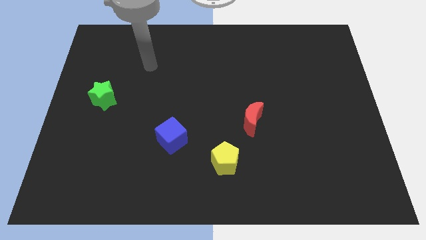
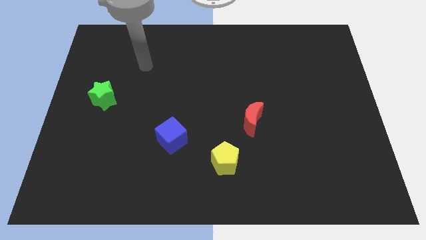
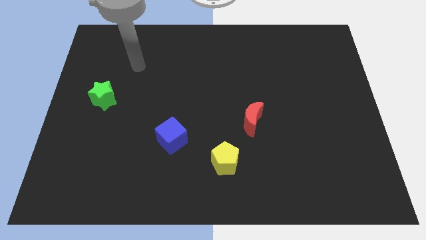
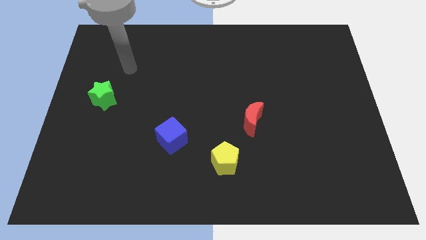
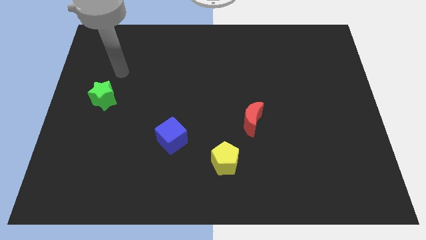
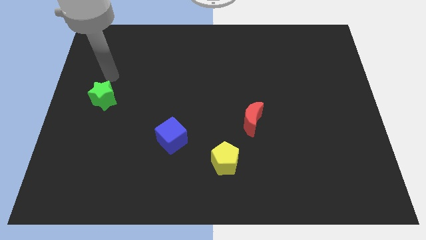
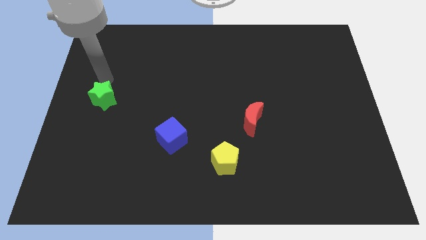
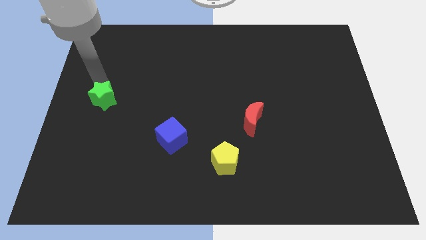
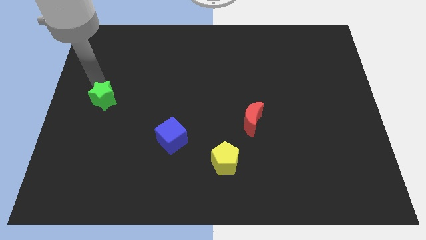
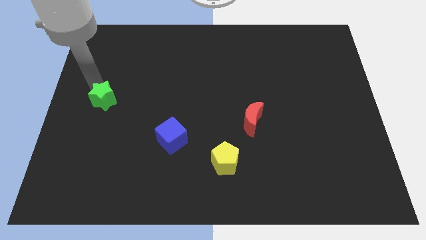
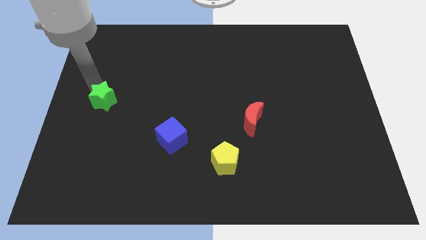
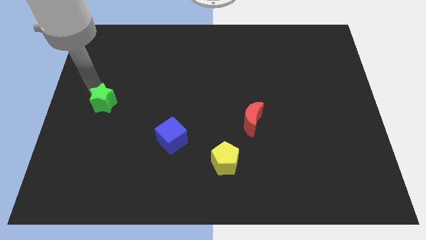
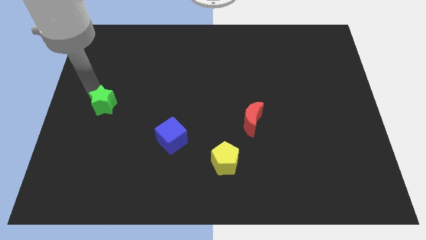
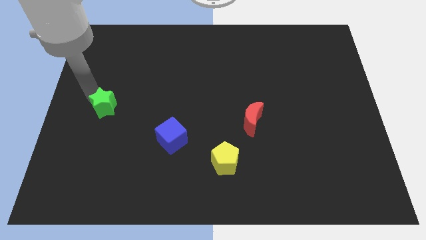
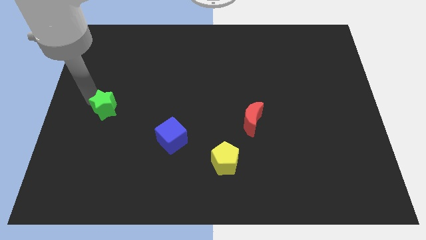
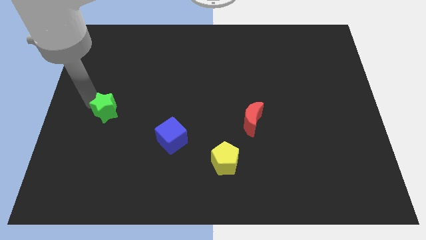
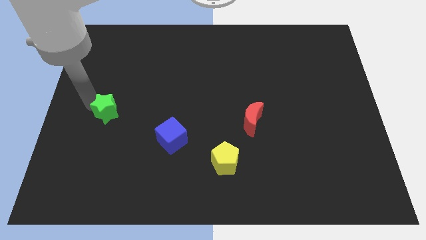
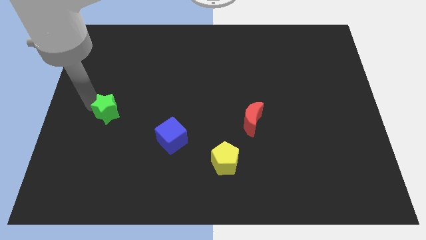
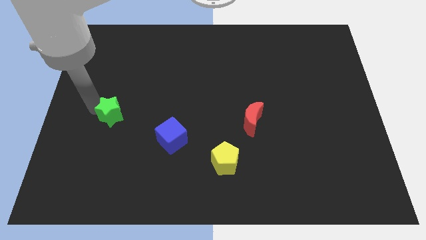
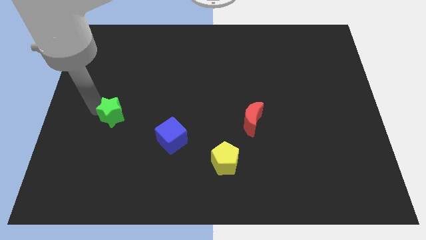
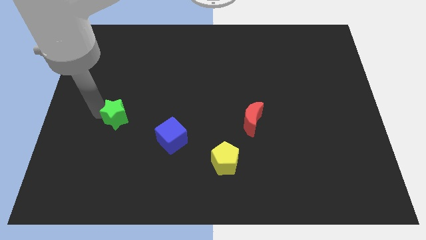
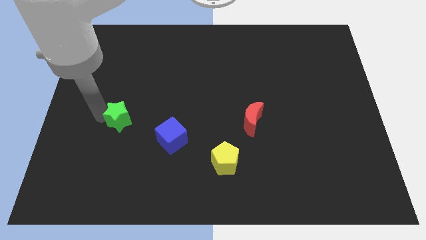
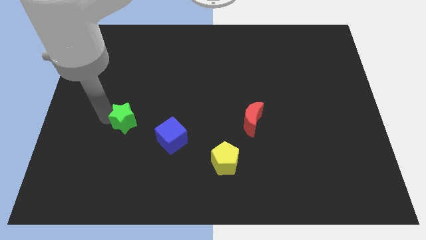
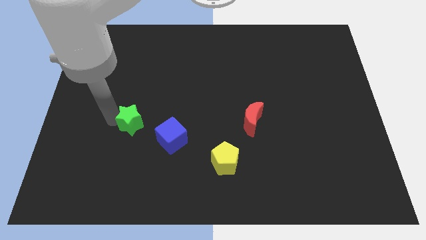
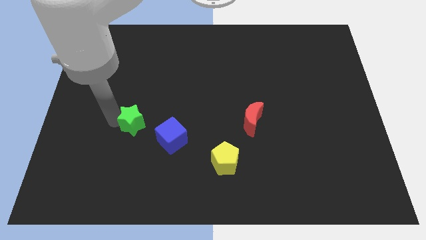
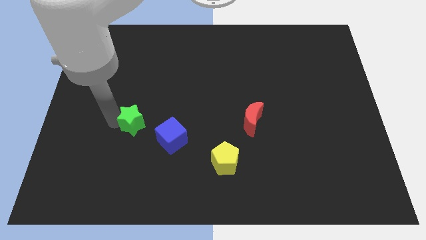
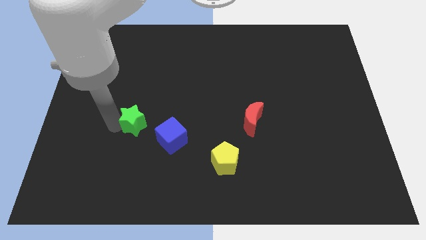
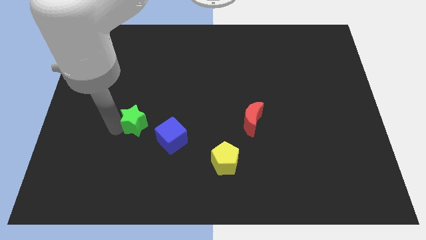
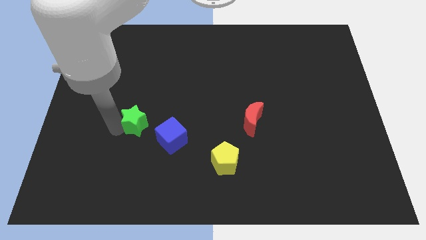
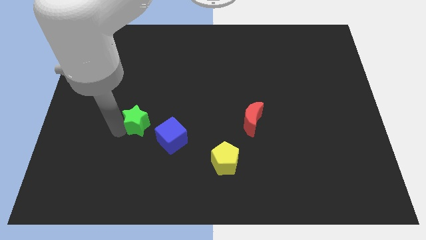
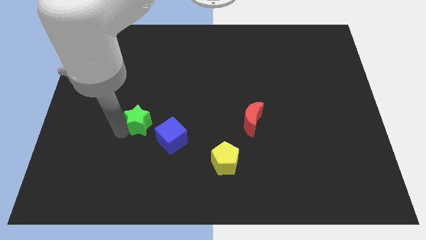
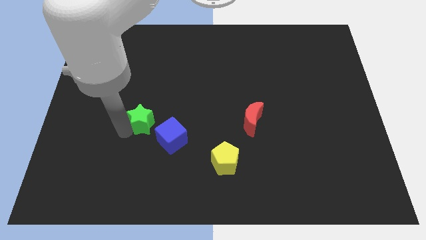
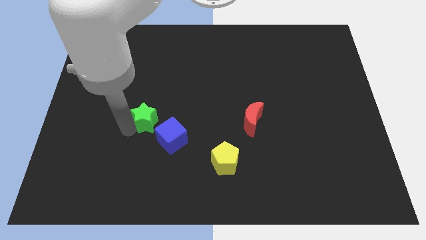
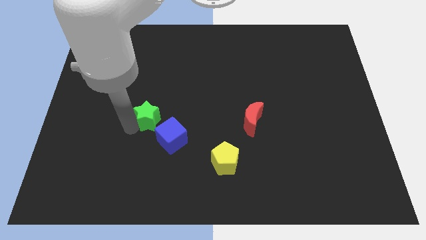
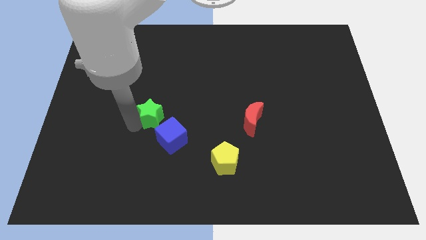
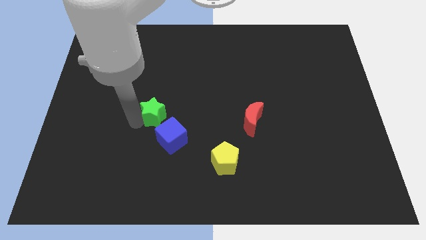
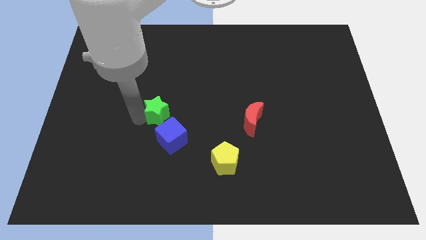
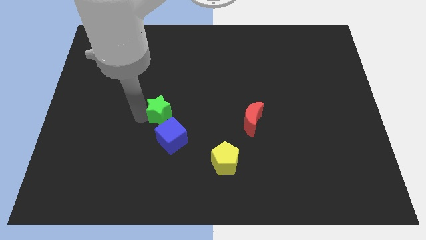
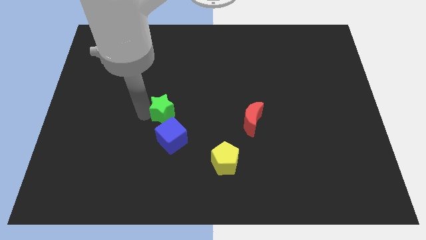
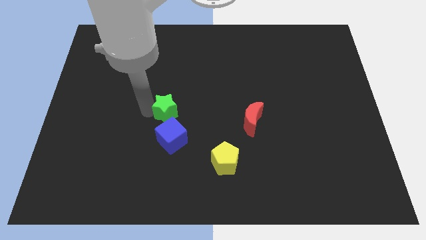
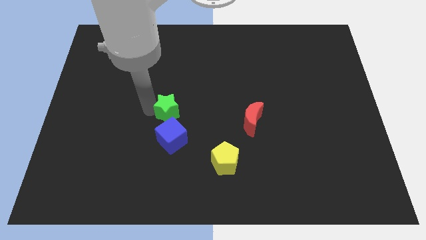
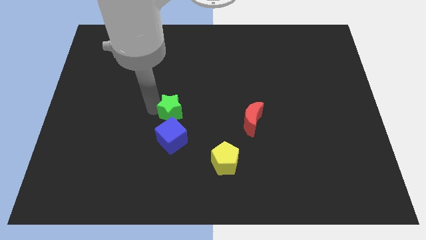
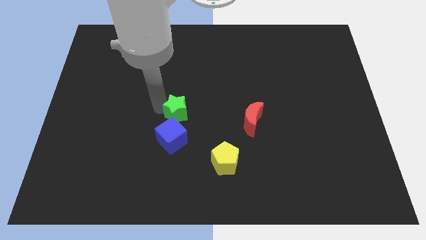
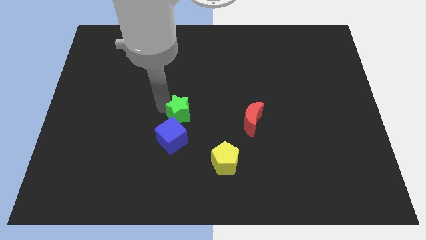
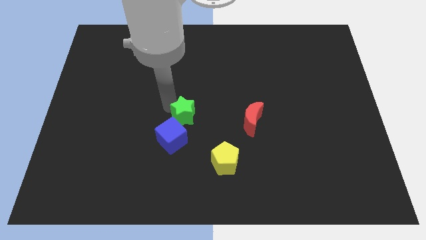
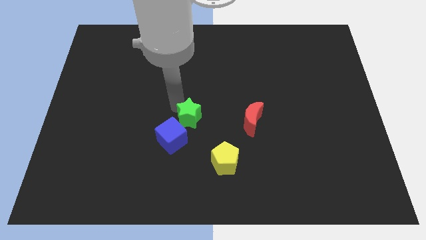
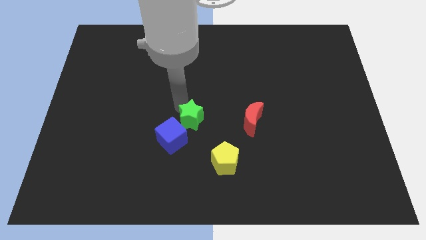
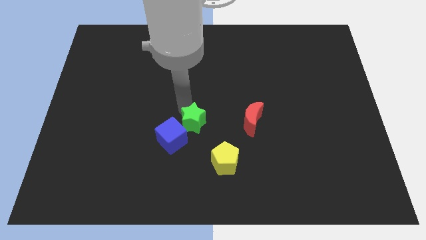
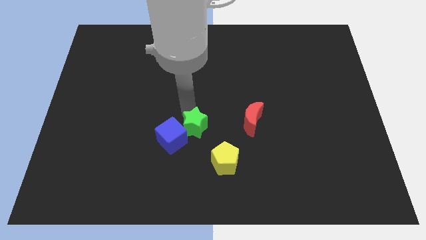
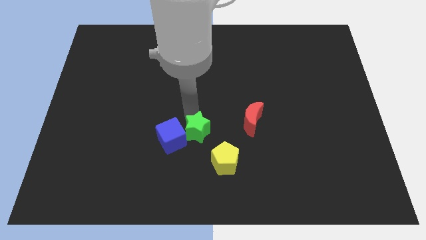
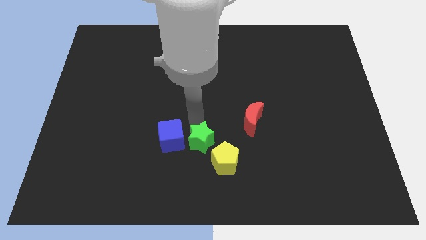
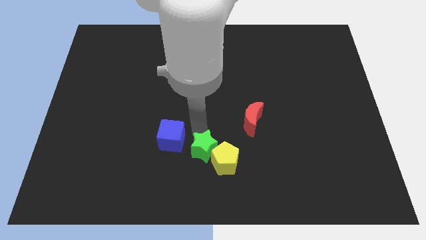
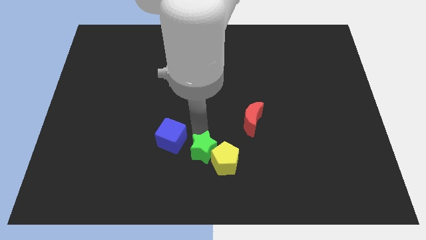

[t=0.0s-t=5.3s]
push the star next to the yellow pentagon

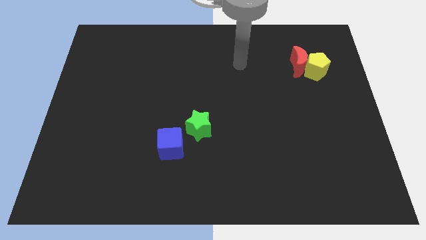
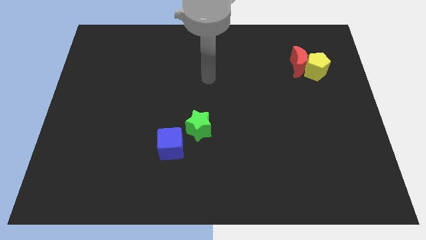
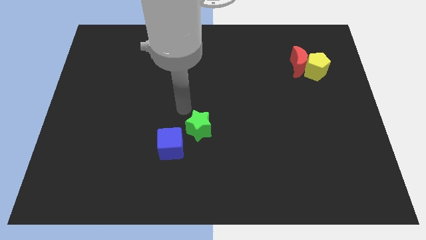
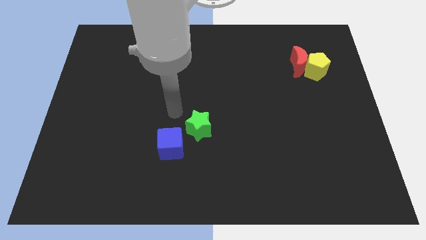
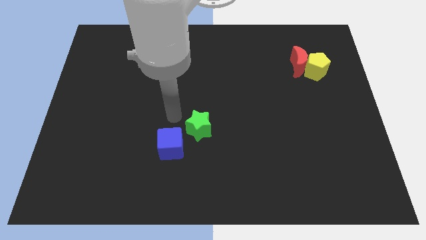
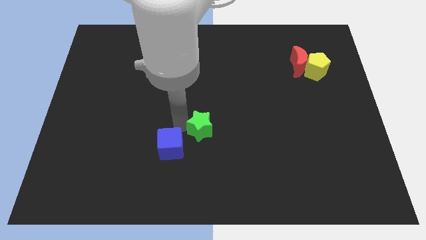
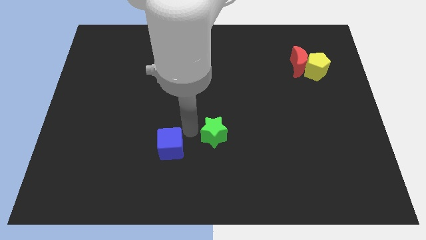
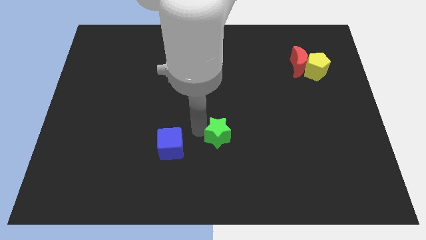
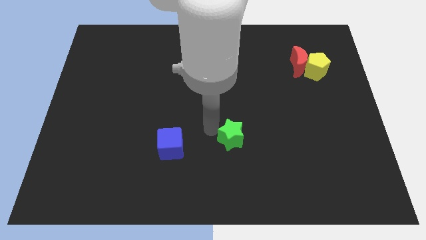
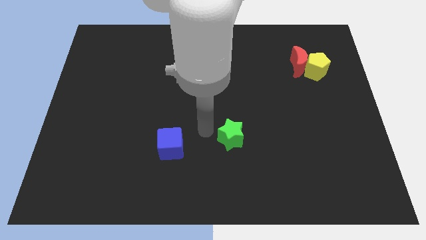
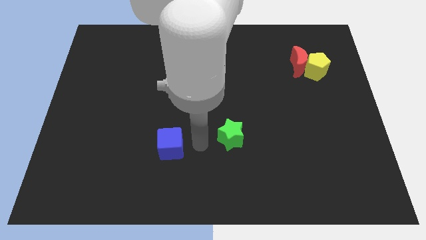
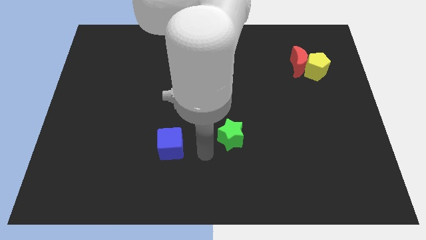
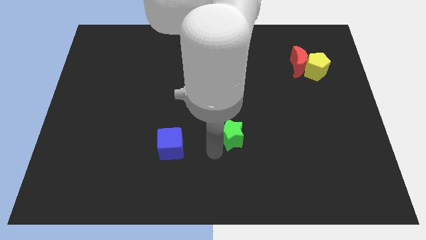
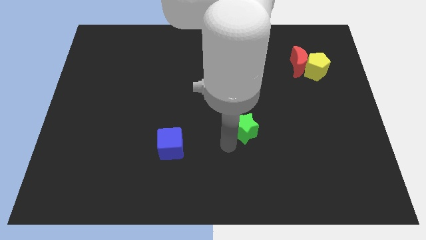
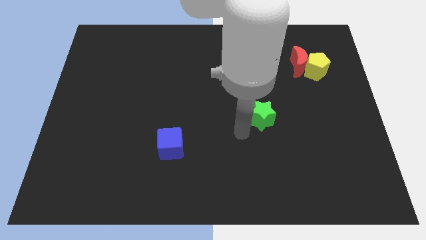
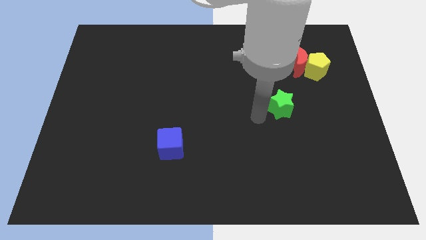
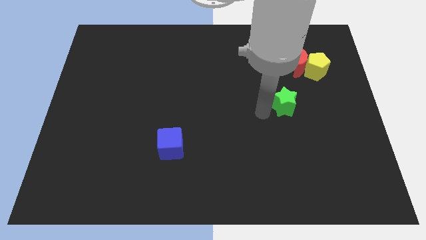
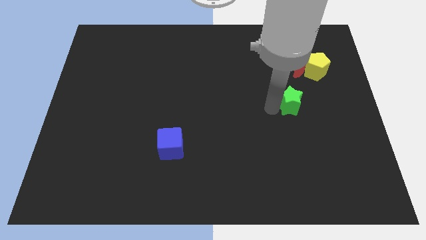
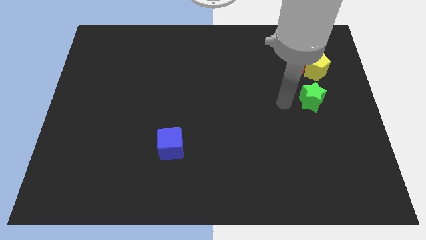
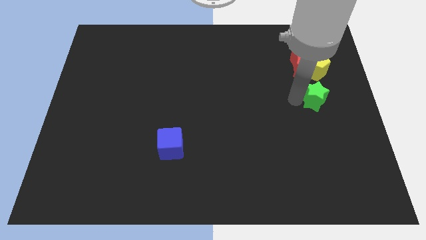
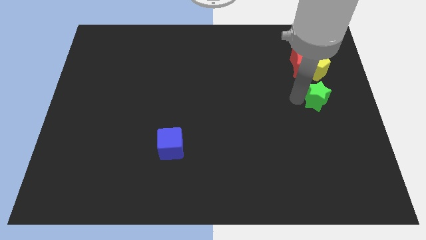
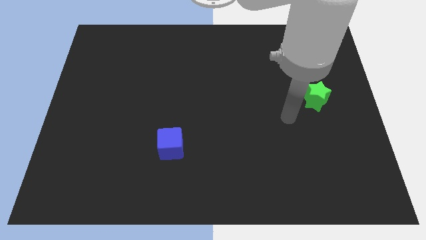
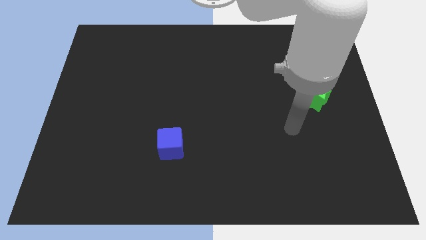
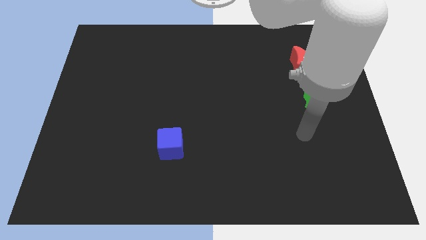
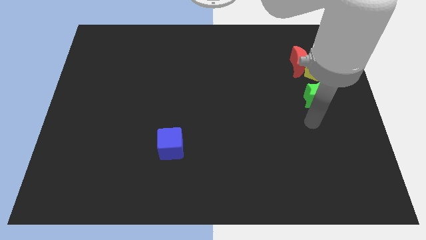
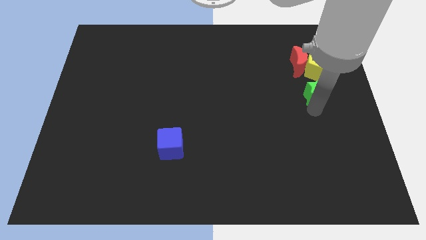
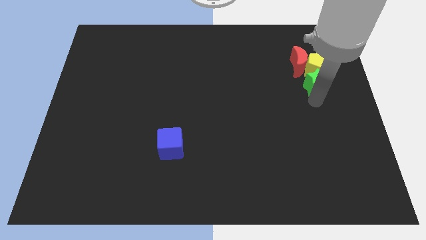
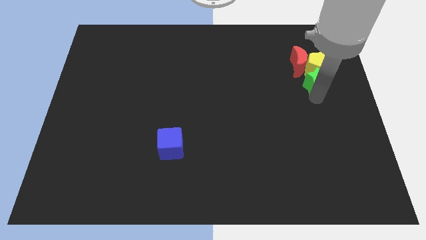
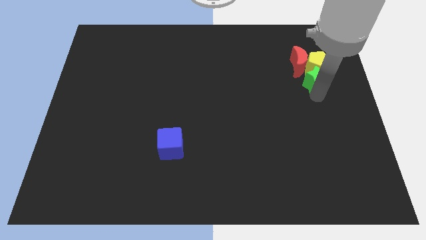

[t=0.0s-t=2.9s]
put the green block next to the pentagon
